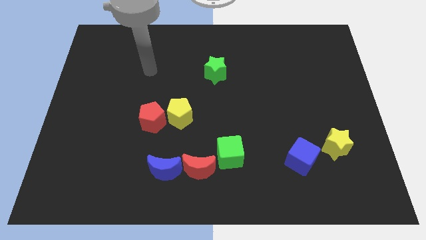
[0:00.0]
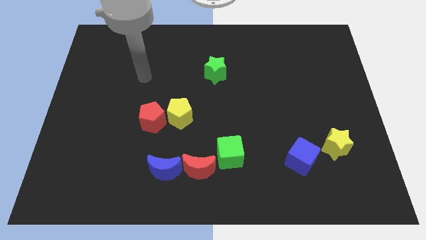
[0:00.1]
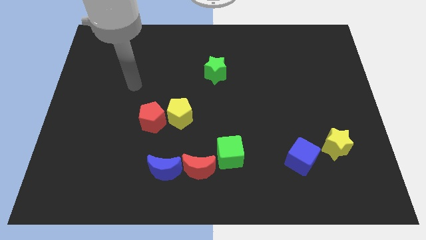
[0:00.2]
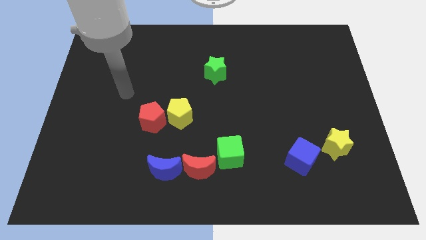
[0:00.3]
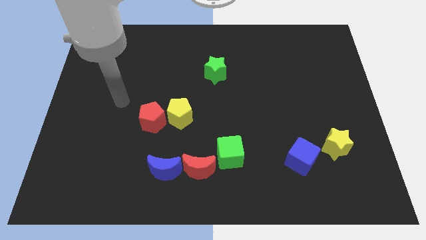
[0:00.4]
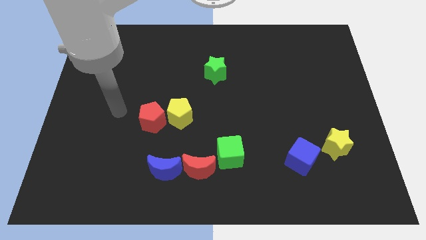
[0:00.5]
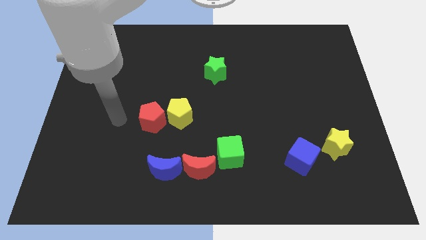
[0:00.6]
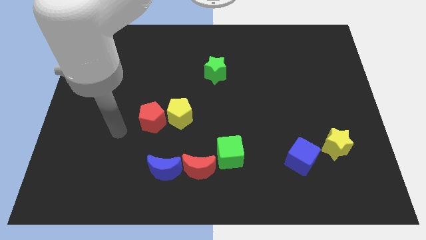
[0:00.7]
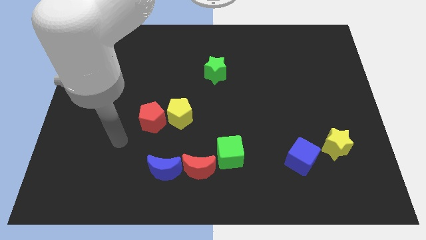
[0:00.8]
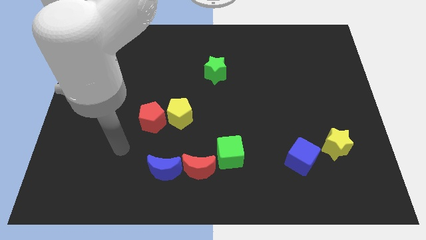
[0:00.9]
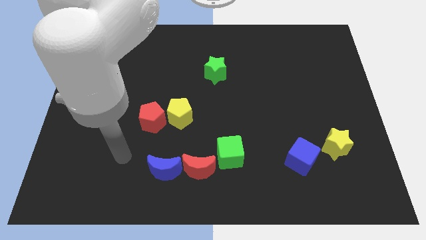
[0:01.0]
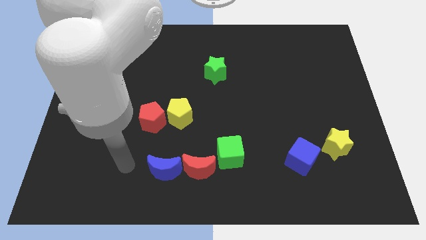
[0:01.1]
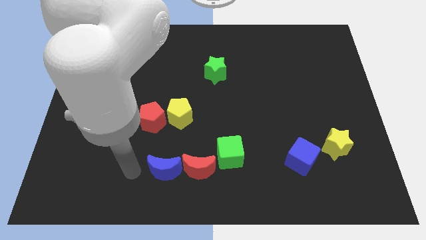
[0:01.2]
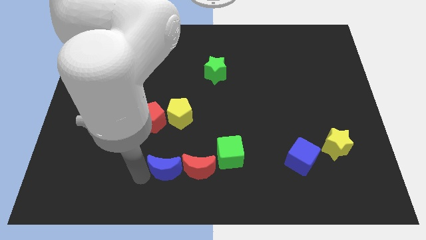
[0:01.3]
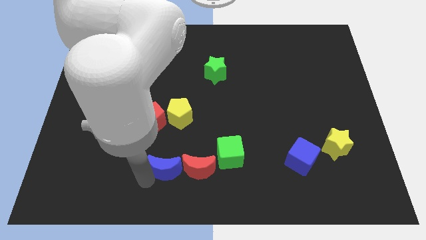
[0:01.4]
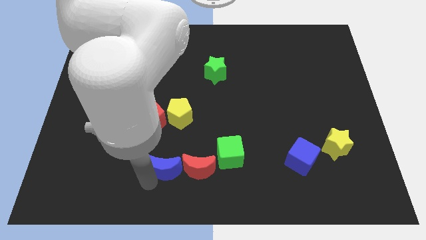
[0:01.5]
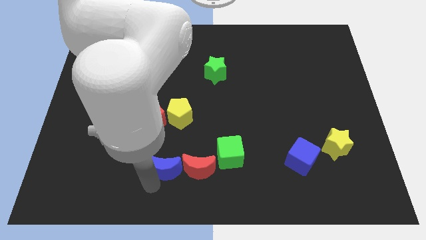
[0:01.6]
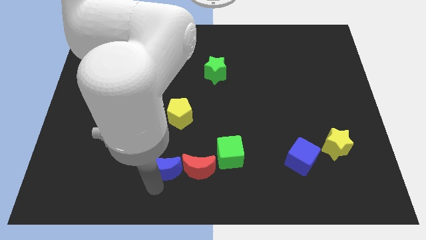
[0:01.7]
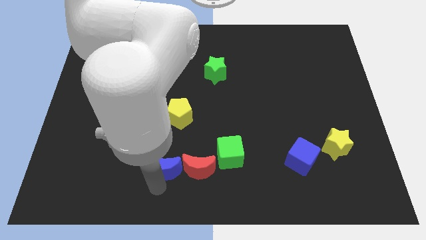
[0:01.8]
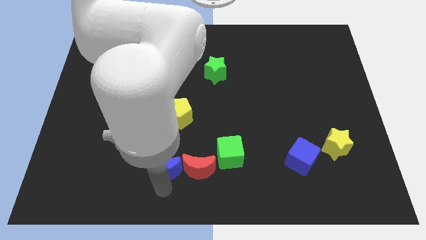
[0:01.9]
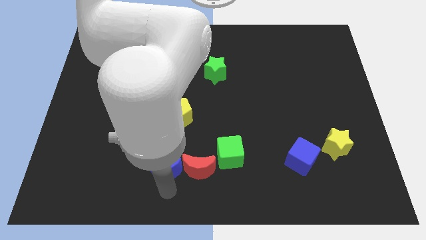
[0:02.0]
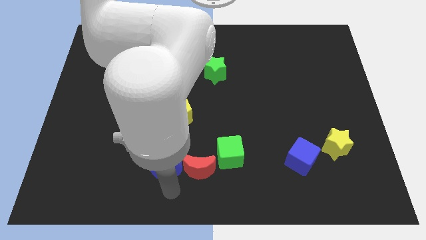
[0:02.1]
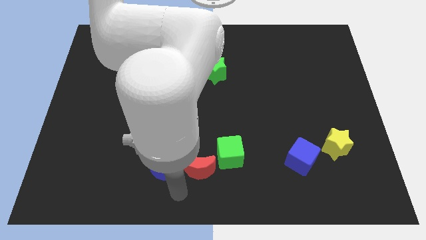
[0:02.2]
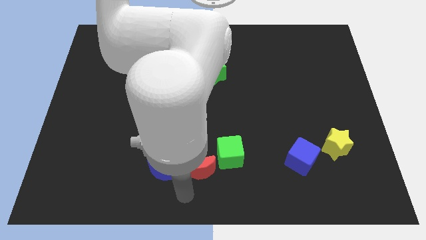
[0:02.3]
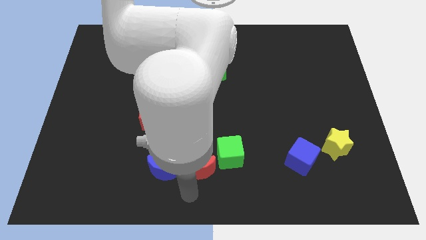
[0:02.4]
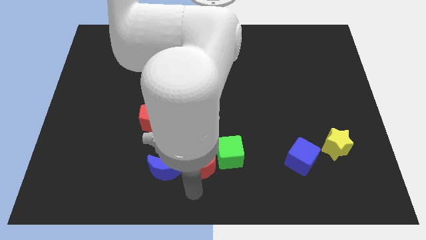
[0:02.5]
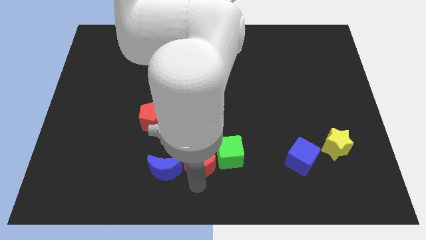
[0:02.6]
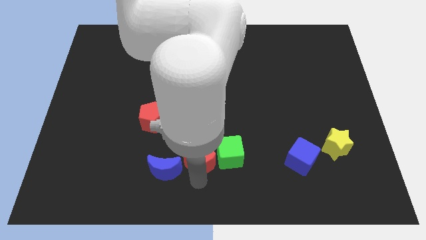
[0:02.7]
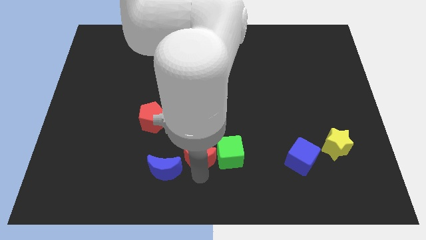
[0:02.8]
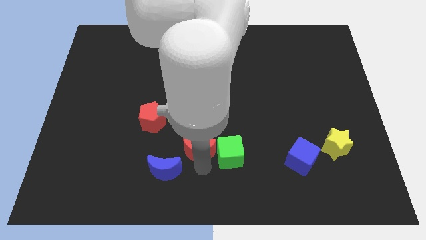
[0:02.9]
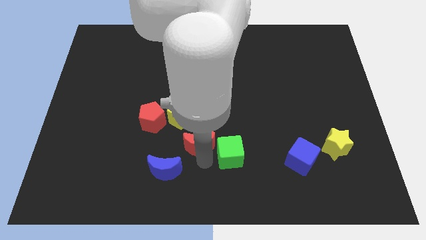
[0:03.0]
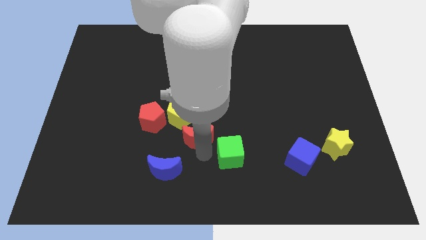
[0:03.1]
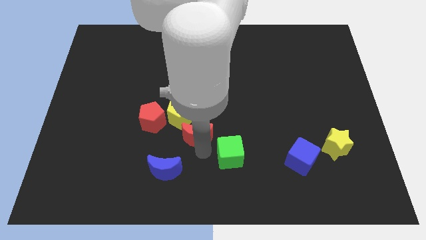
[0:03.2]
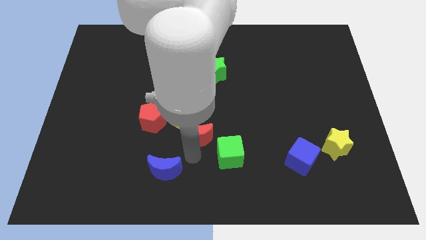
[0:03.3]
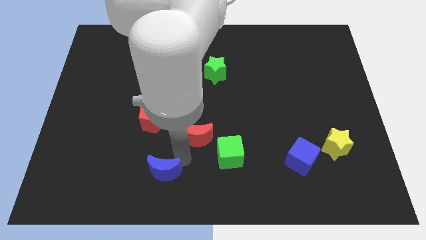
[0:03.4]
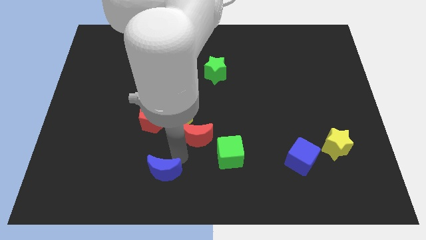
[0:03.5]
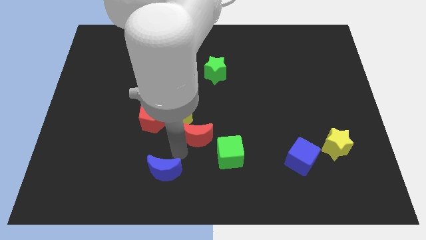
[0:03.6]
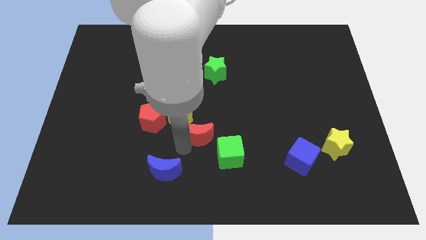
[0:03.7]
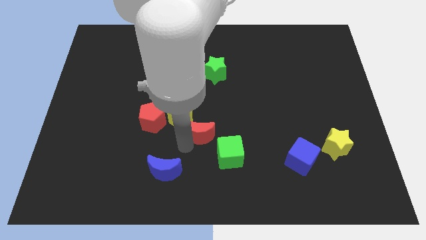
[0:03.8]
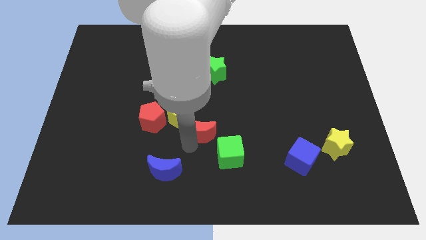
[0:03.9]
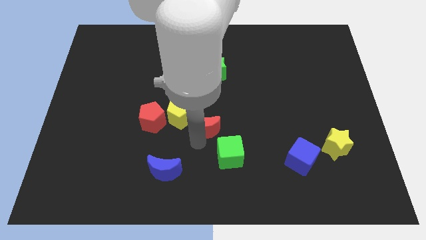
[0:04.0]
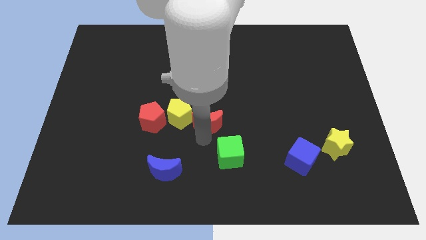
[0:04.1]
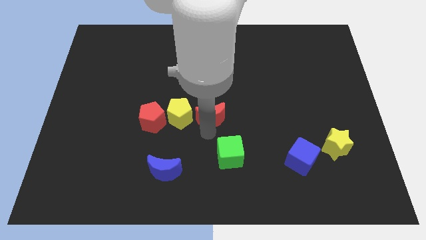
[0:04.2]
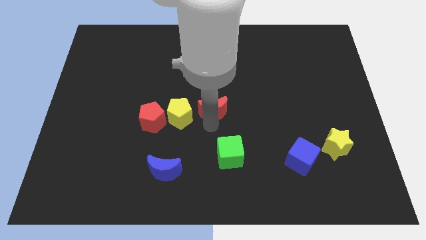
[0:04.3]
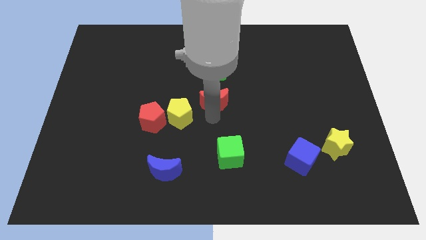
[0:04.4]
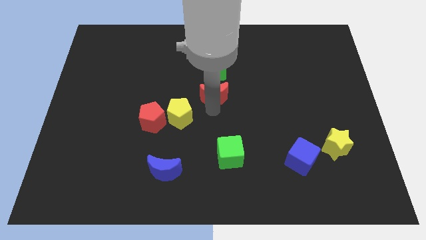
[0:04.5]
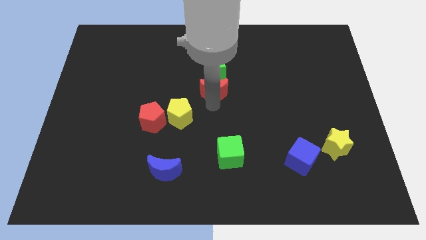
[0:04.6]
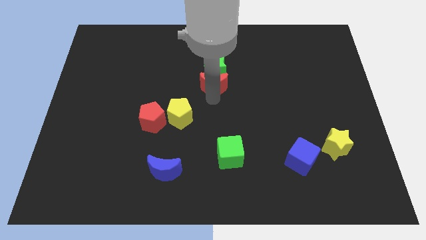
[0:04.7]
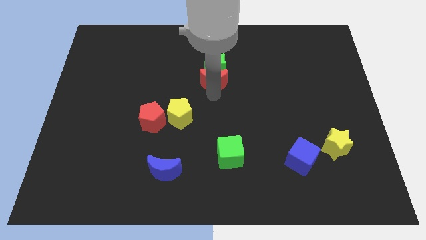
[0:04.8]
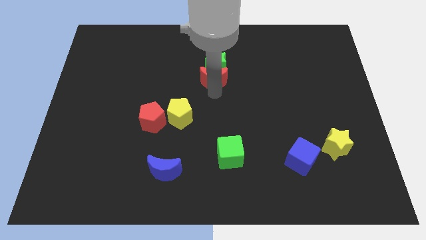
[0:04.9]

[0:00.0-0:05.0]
move the red moon towards the green star

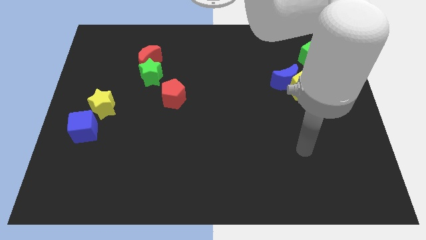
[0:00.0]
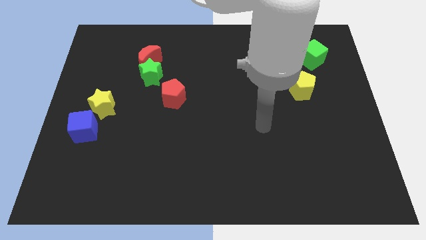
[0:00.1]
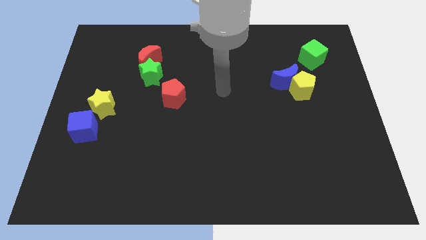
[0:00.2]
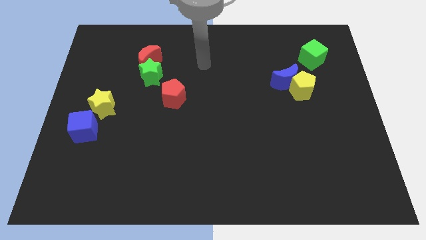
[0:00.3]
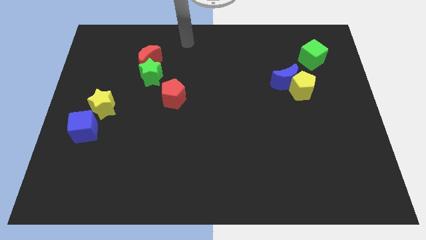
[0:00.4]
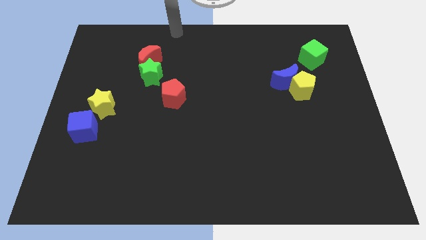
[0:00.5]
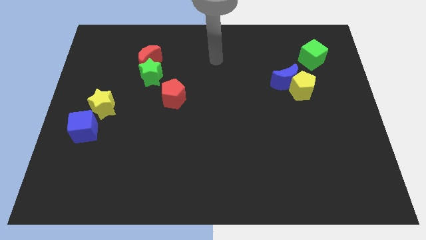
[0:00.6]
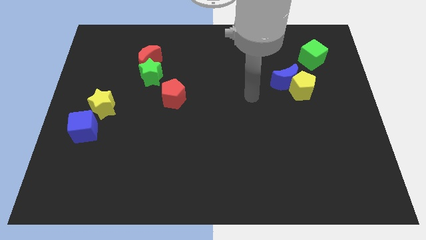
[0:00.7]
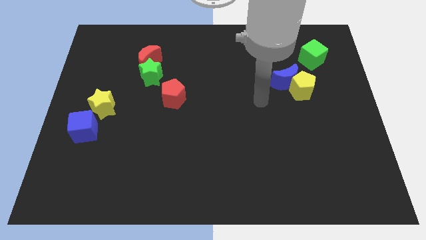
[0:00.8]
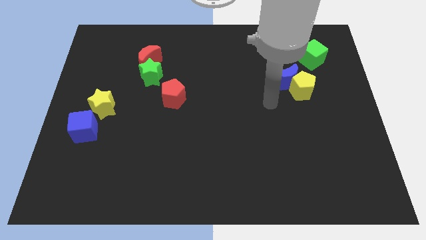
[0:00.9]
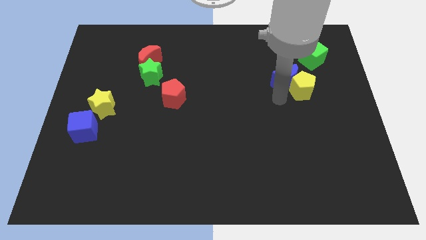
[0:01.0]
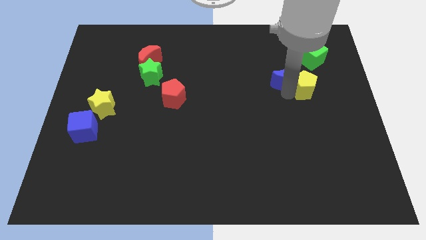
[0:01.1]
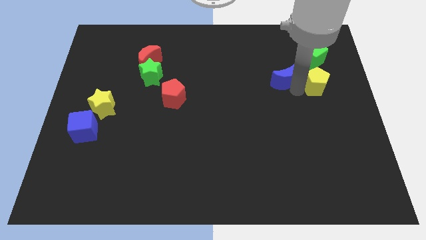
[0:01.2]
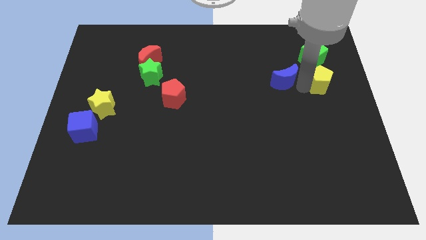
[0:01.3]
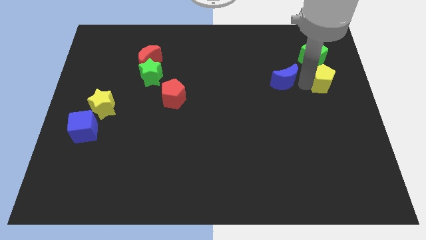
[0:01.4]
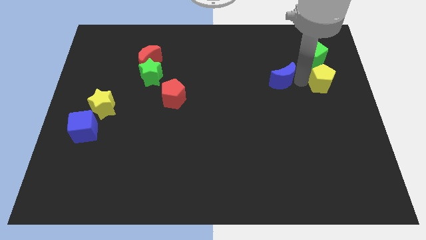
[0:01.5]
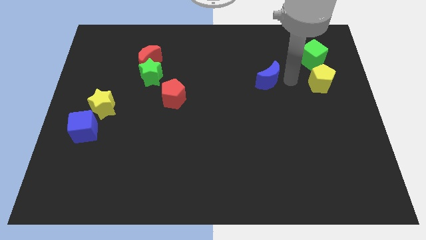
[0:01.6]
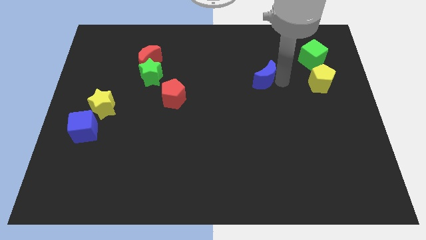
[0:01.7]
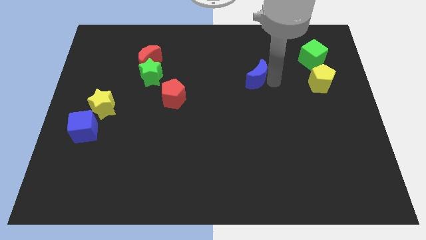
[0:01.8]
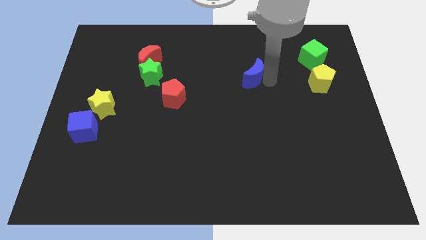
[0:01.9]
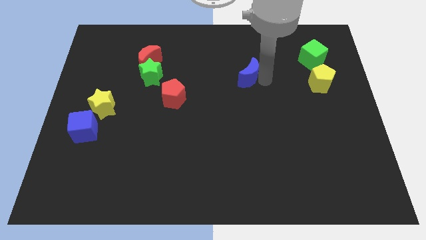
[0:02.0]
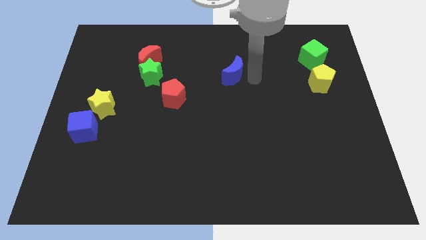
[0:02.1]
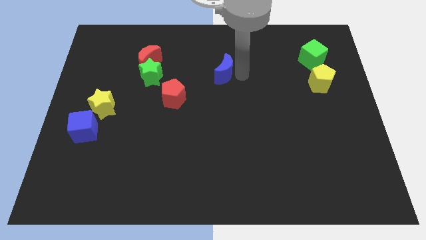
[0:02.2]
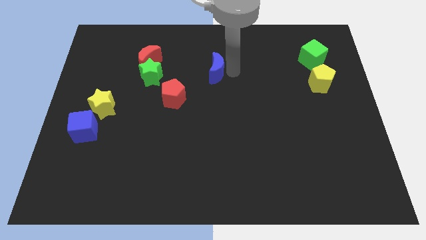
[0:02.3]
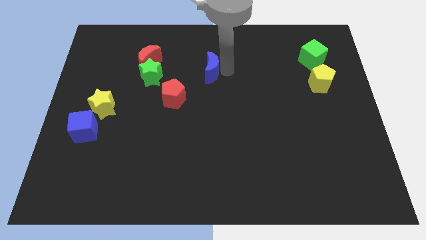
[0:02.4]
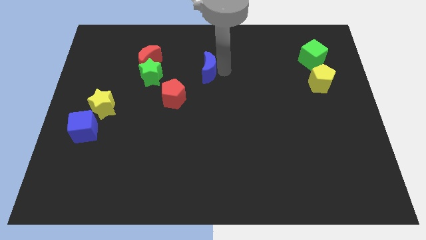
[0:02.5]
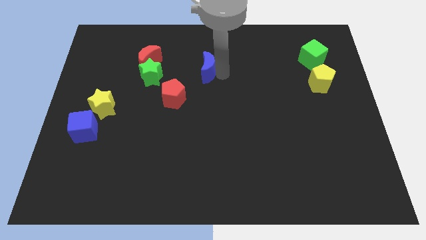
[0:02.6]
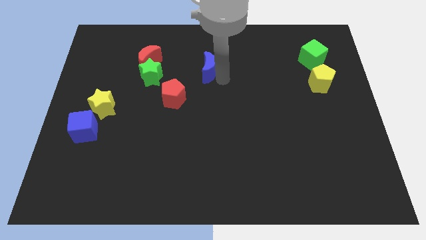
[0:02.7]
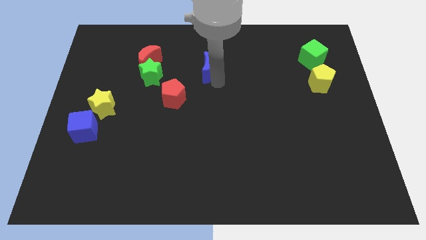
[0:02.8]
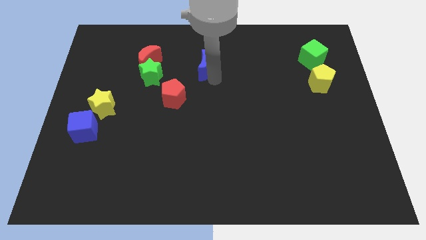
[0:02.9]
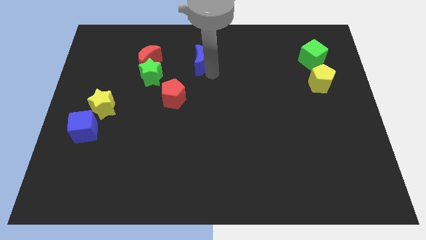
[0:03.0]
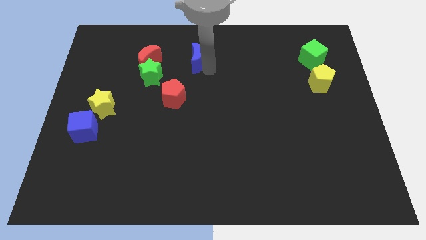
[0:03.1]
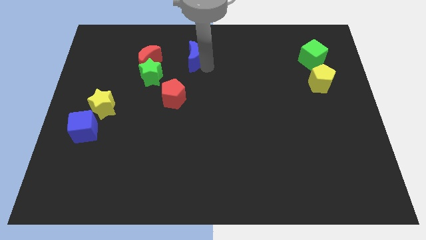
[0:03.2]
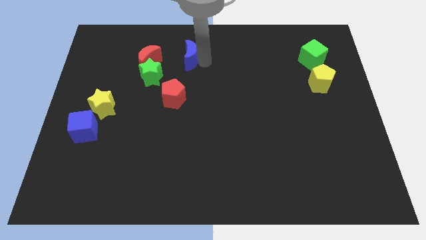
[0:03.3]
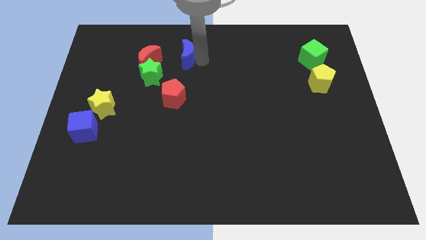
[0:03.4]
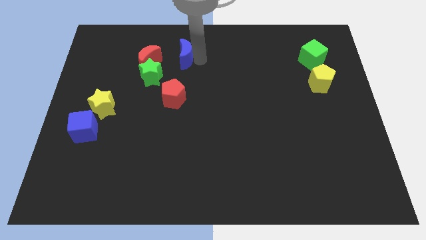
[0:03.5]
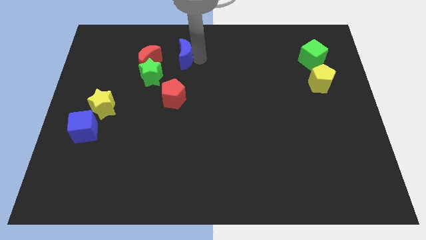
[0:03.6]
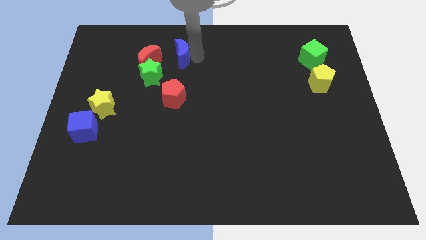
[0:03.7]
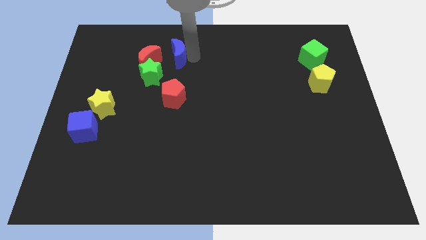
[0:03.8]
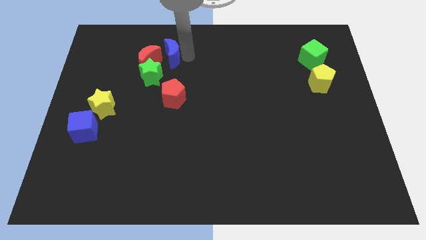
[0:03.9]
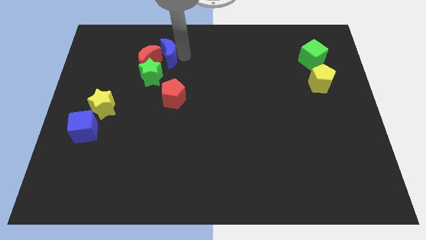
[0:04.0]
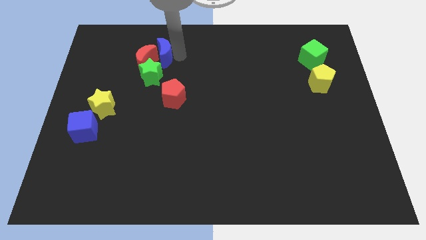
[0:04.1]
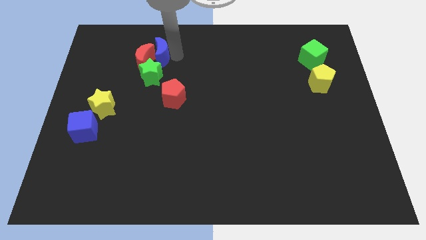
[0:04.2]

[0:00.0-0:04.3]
put the blue moon next to the red moon
